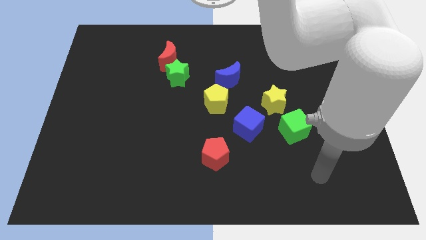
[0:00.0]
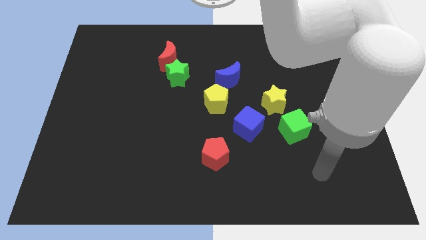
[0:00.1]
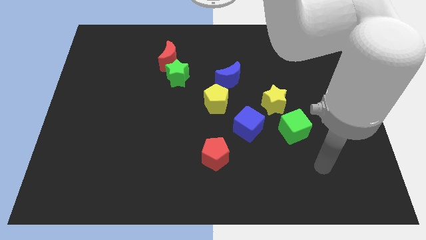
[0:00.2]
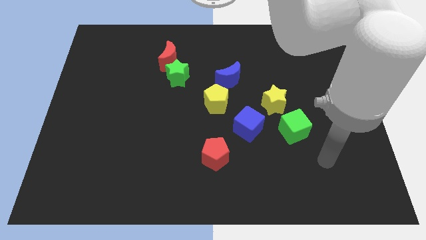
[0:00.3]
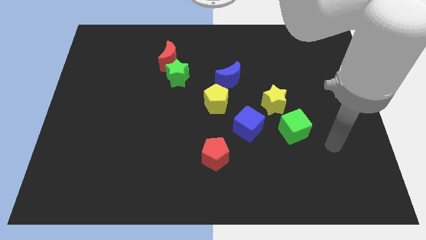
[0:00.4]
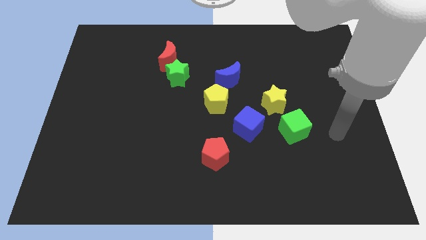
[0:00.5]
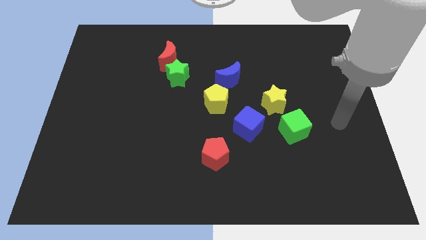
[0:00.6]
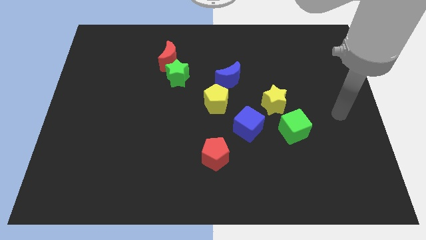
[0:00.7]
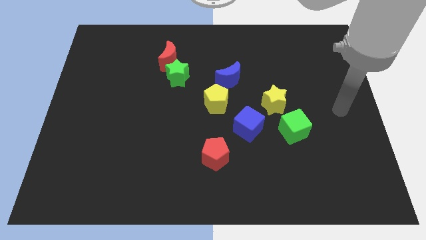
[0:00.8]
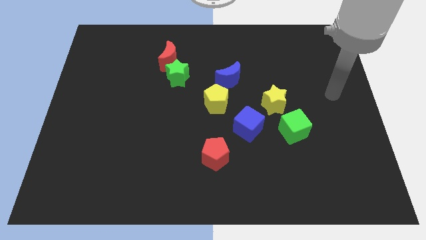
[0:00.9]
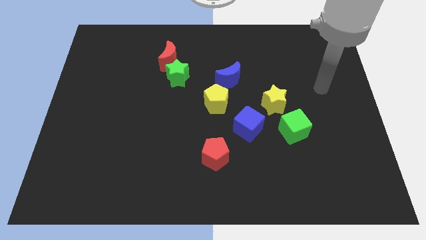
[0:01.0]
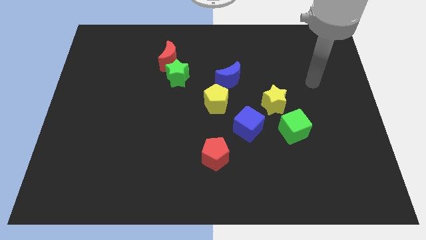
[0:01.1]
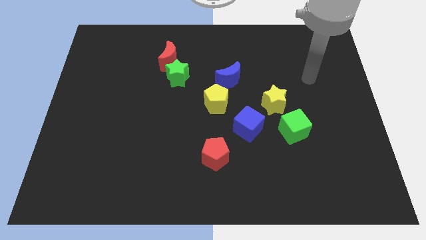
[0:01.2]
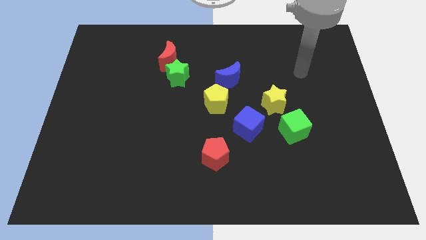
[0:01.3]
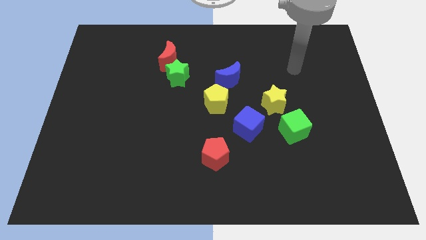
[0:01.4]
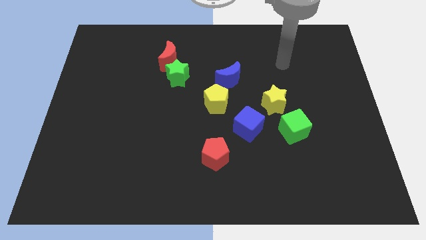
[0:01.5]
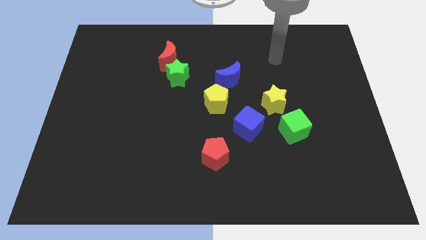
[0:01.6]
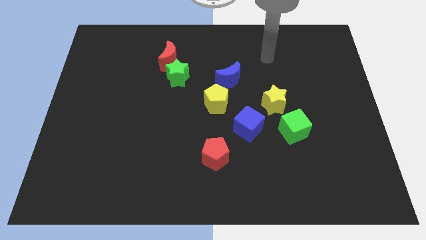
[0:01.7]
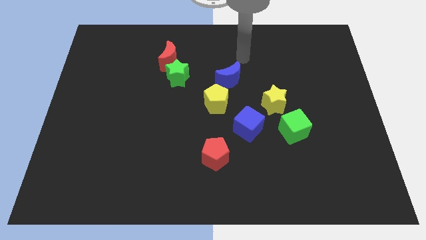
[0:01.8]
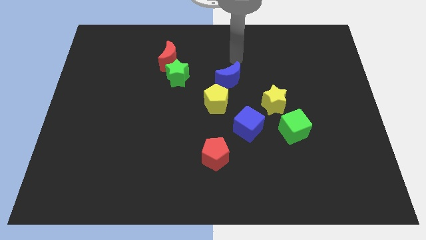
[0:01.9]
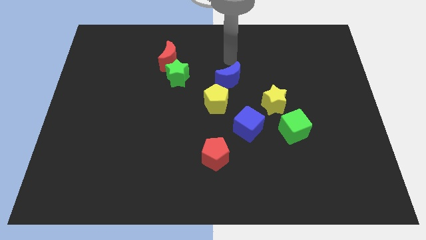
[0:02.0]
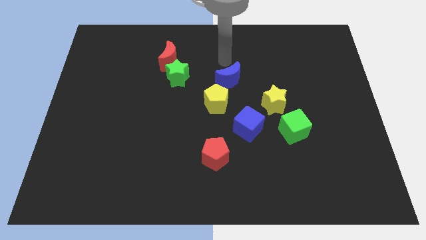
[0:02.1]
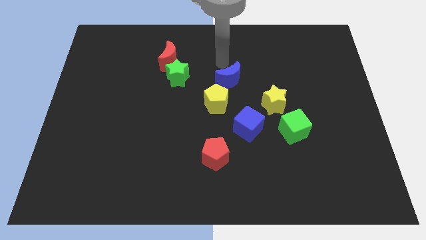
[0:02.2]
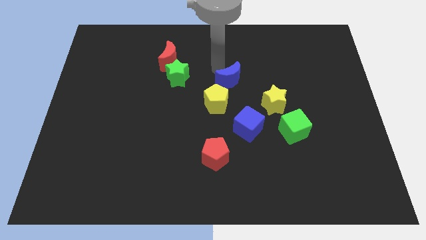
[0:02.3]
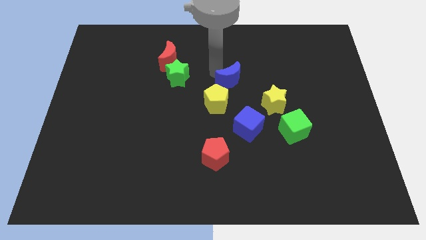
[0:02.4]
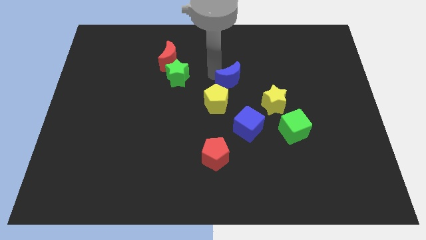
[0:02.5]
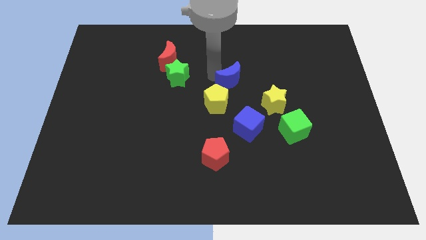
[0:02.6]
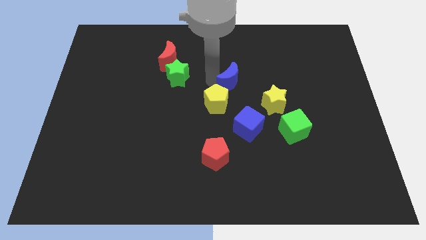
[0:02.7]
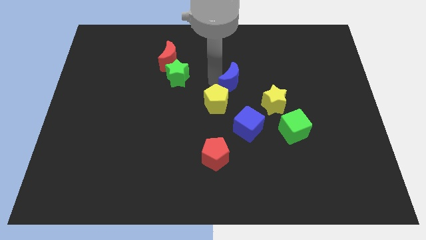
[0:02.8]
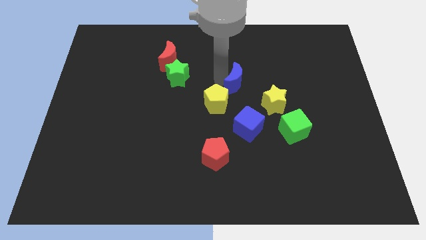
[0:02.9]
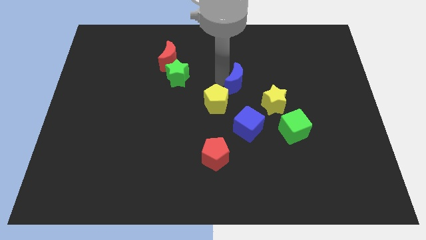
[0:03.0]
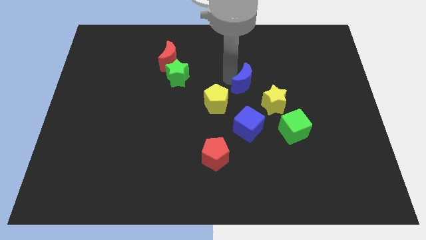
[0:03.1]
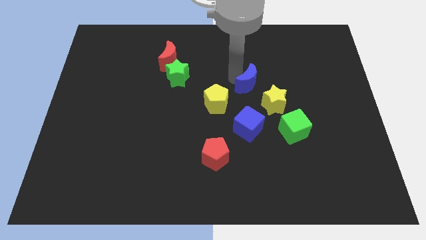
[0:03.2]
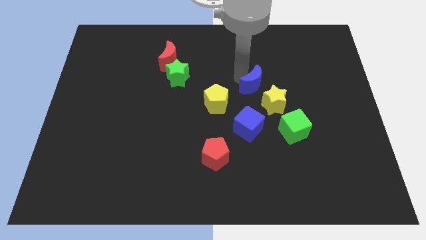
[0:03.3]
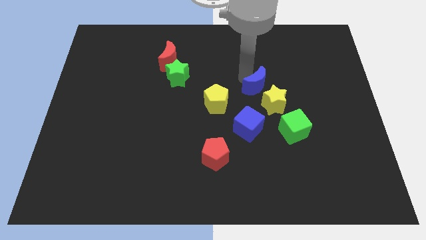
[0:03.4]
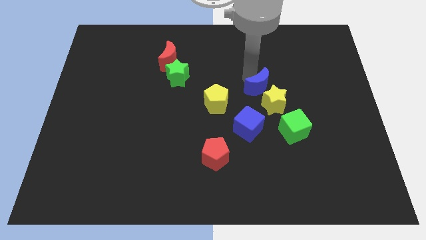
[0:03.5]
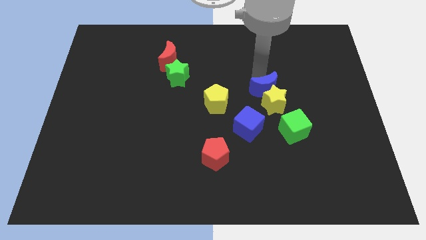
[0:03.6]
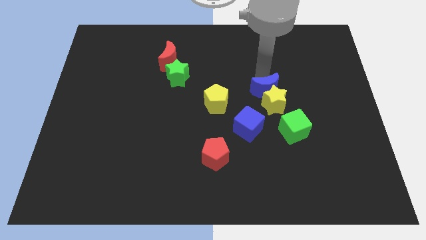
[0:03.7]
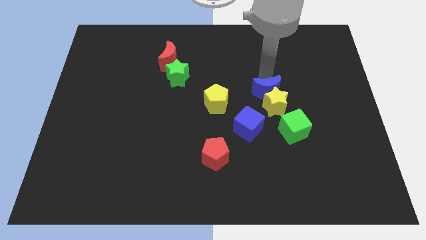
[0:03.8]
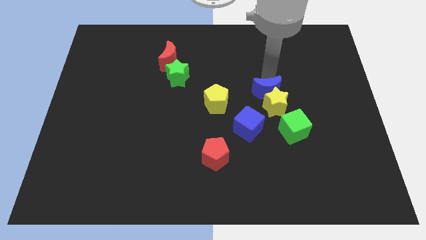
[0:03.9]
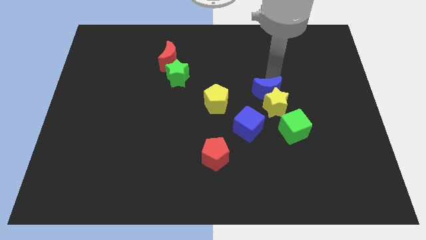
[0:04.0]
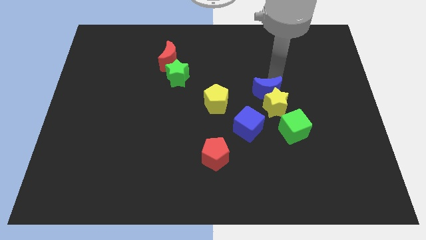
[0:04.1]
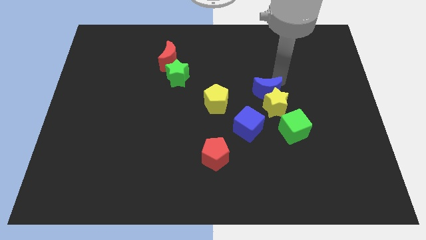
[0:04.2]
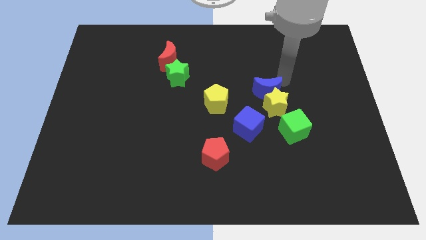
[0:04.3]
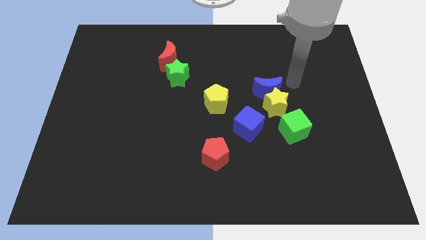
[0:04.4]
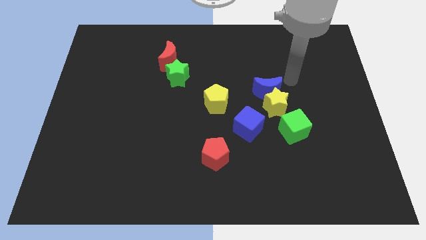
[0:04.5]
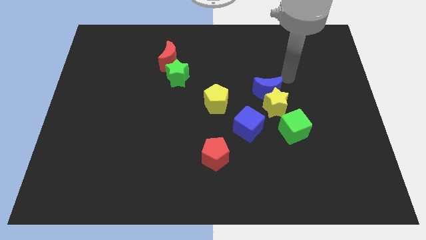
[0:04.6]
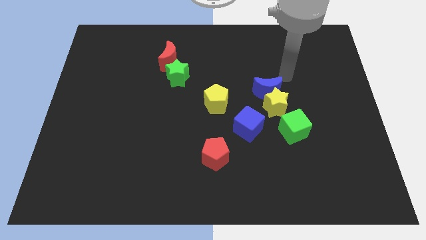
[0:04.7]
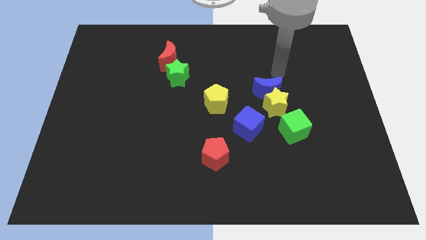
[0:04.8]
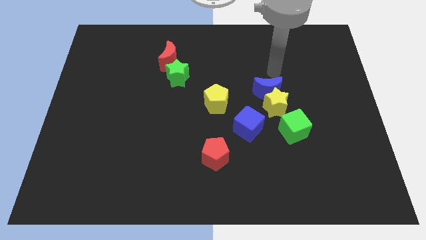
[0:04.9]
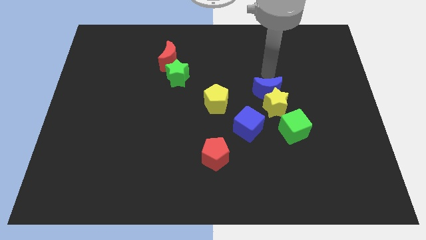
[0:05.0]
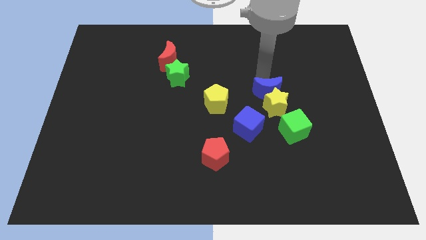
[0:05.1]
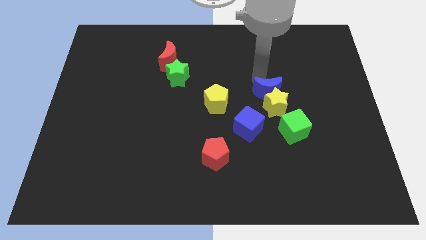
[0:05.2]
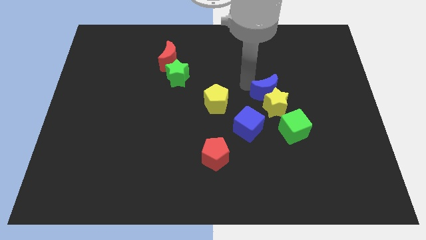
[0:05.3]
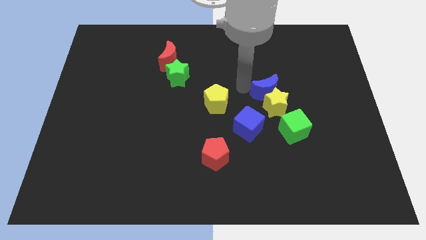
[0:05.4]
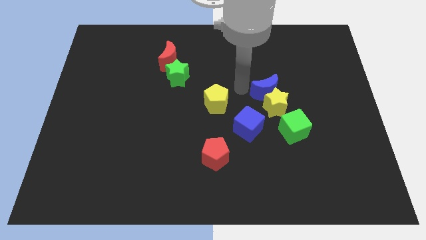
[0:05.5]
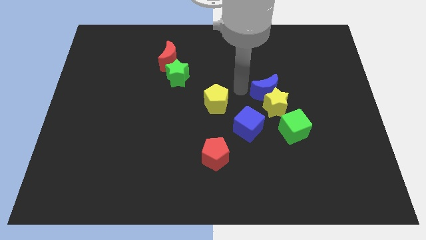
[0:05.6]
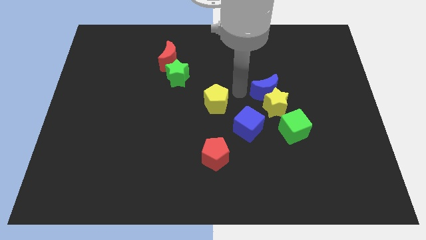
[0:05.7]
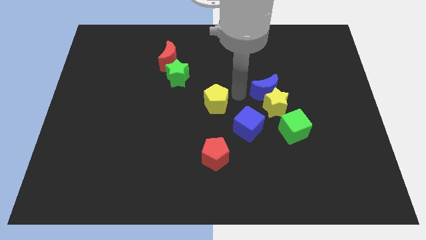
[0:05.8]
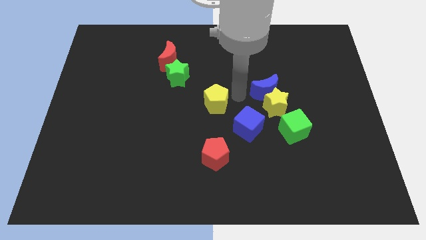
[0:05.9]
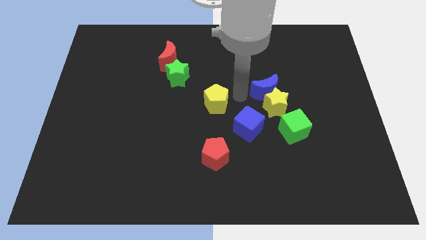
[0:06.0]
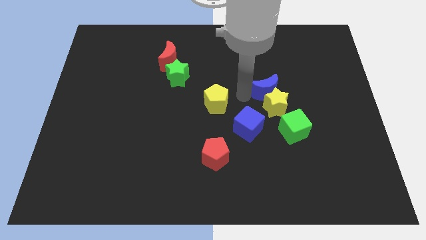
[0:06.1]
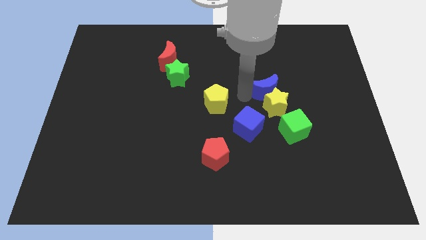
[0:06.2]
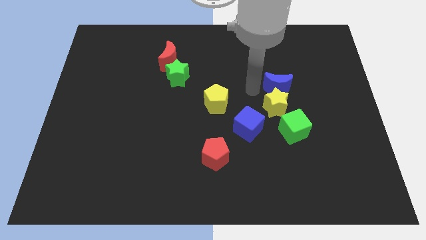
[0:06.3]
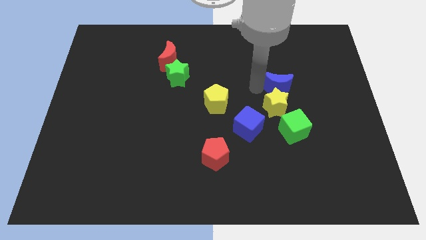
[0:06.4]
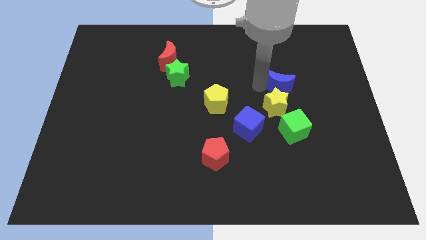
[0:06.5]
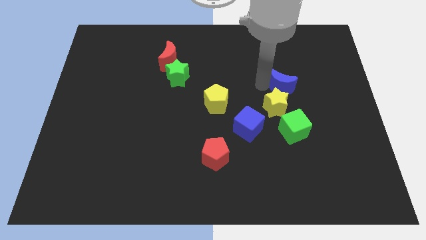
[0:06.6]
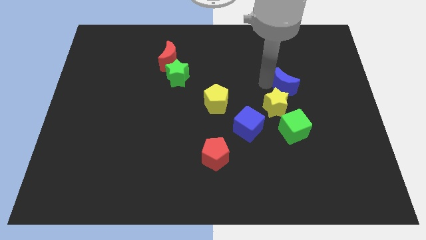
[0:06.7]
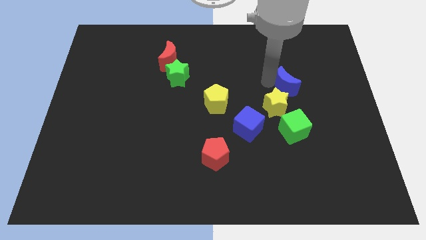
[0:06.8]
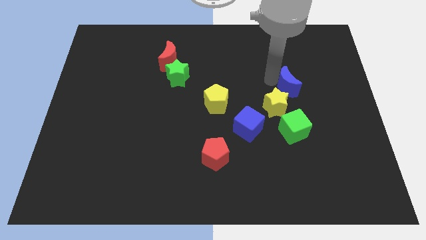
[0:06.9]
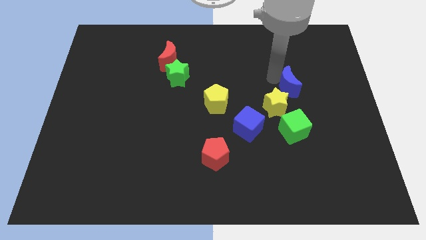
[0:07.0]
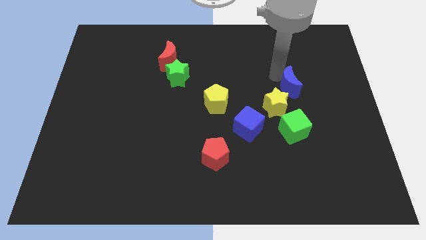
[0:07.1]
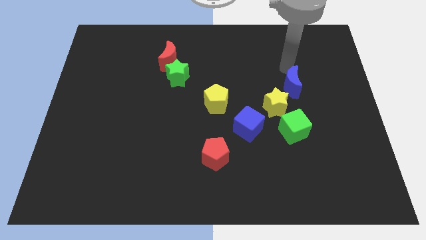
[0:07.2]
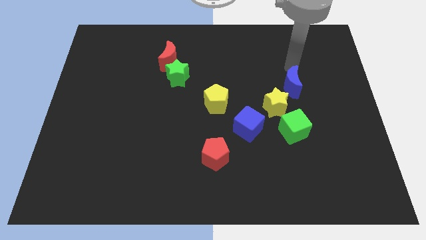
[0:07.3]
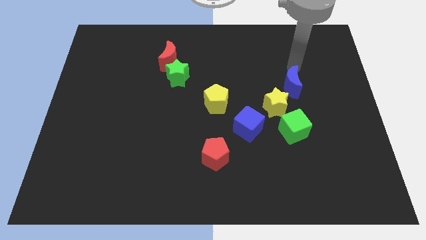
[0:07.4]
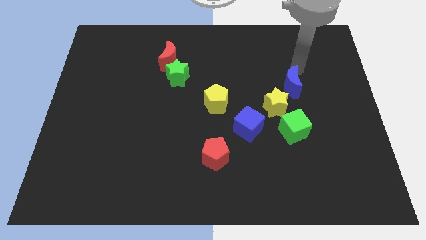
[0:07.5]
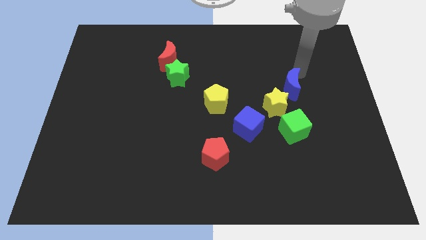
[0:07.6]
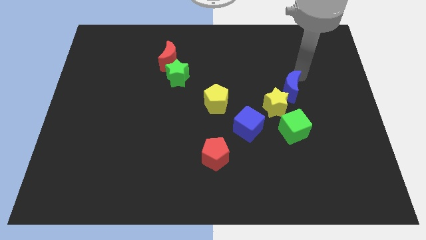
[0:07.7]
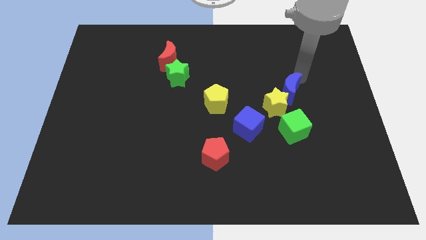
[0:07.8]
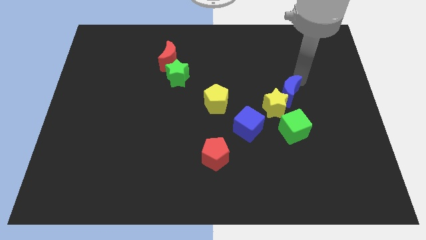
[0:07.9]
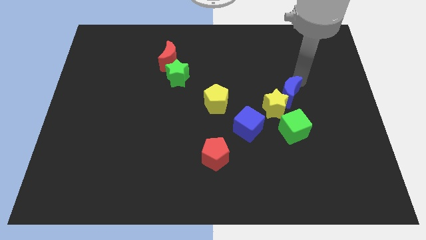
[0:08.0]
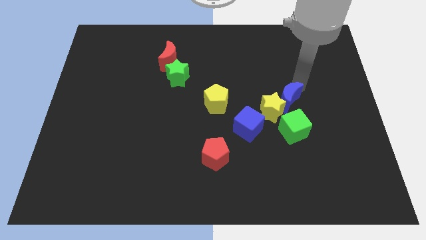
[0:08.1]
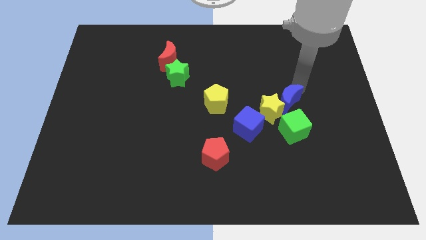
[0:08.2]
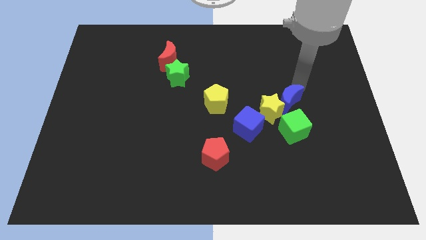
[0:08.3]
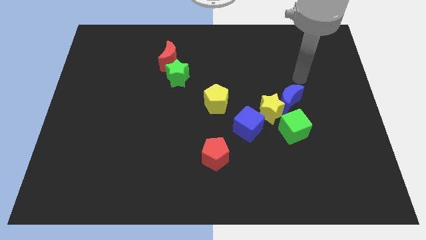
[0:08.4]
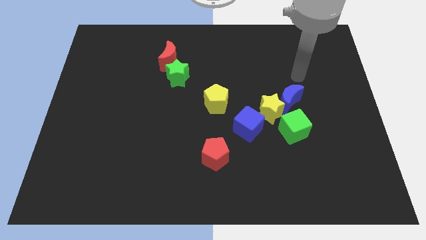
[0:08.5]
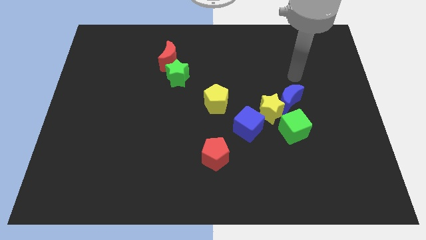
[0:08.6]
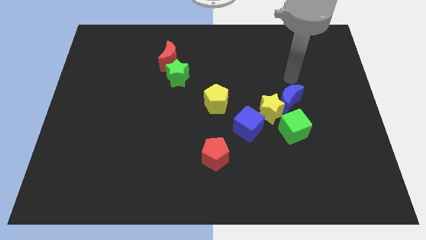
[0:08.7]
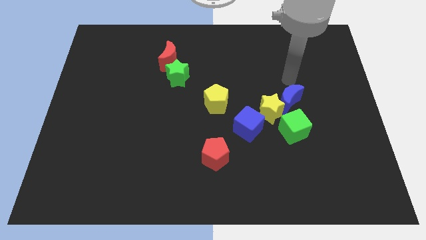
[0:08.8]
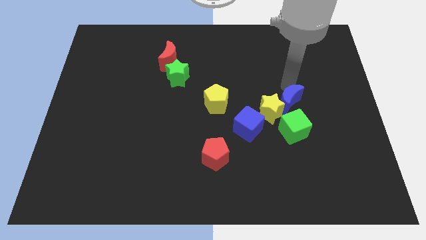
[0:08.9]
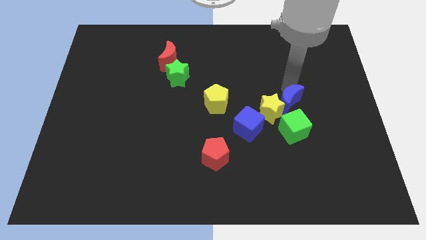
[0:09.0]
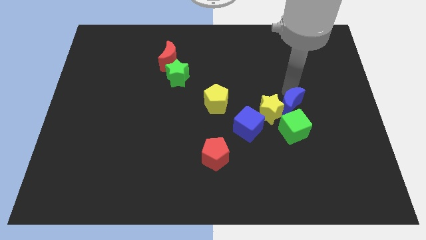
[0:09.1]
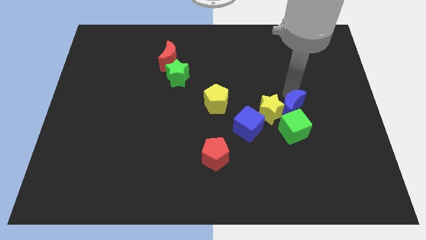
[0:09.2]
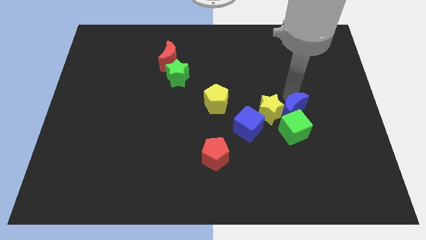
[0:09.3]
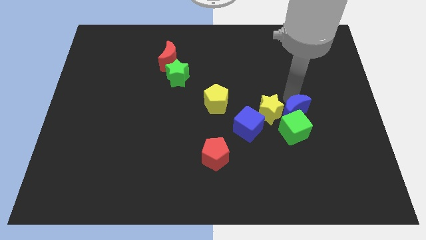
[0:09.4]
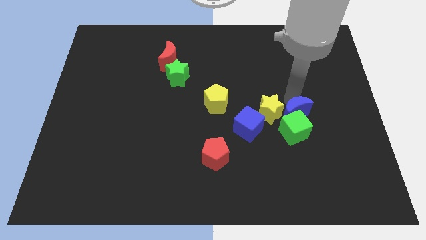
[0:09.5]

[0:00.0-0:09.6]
push the blue moon to the green cube
